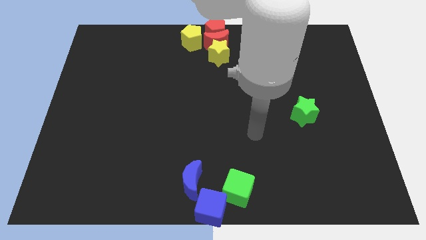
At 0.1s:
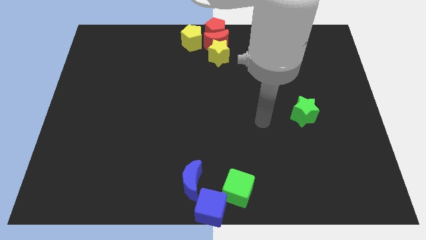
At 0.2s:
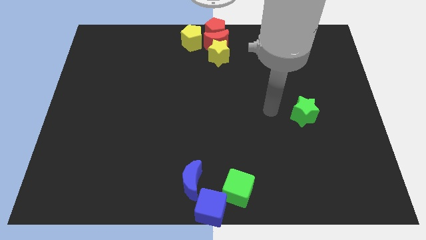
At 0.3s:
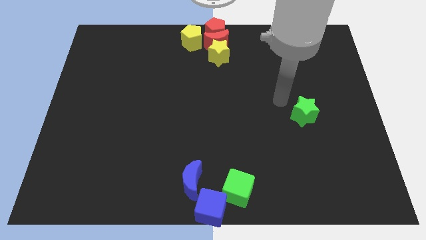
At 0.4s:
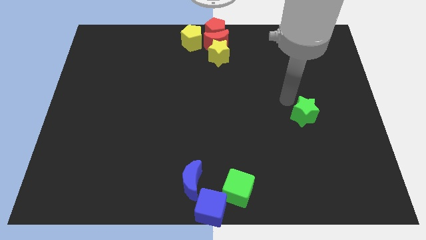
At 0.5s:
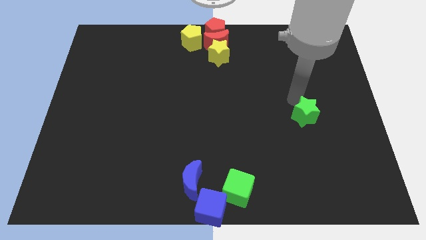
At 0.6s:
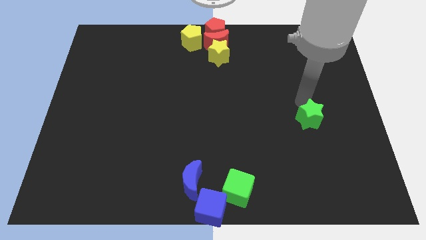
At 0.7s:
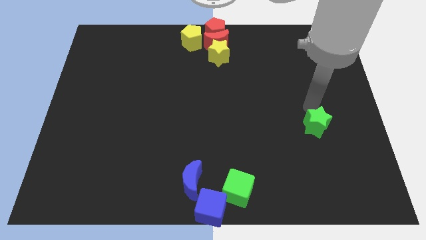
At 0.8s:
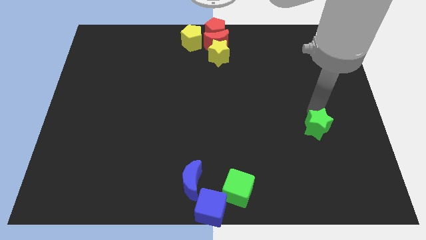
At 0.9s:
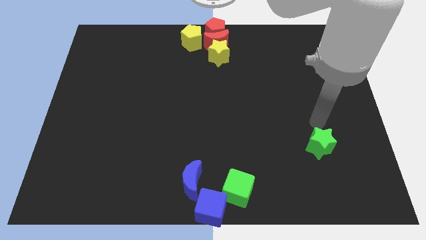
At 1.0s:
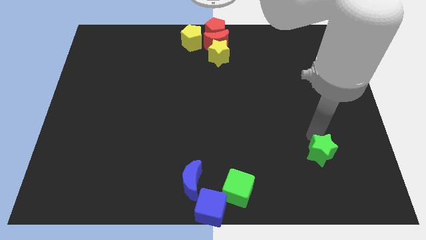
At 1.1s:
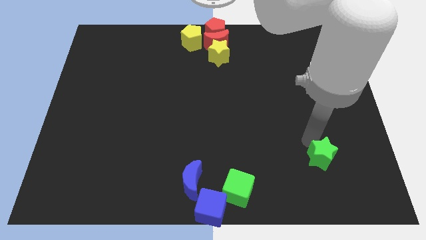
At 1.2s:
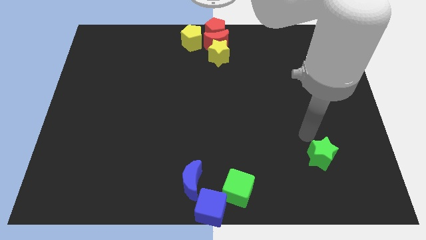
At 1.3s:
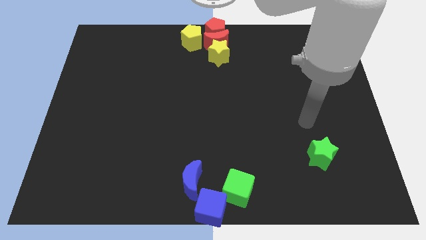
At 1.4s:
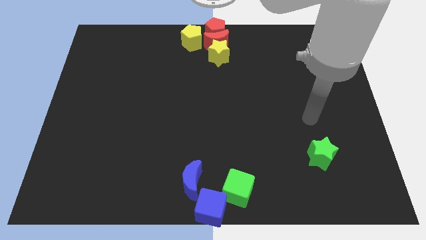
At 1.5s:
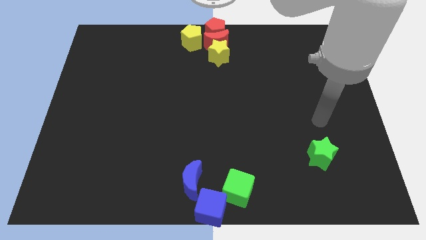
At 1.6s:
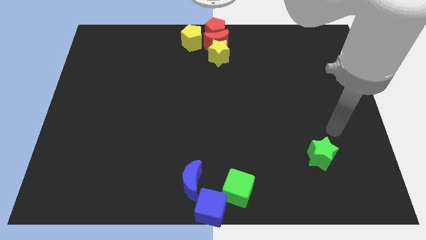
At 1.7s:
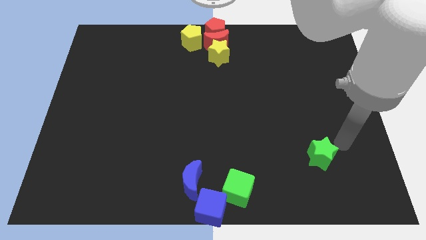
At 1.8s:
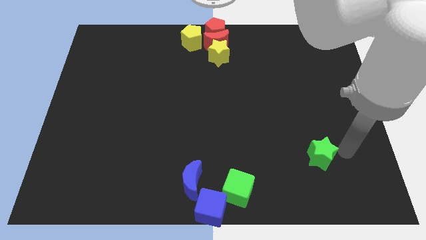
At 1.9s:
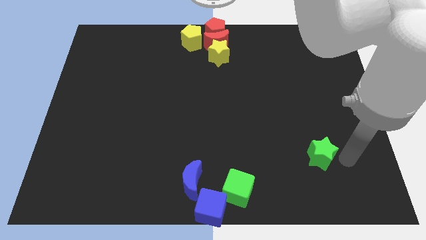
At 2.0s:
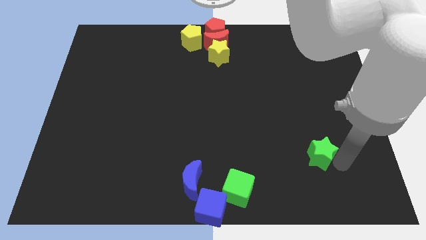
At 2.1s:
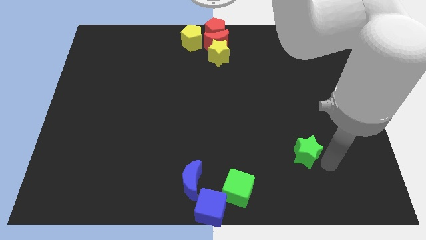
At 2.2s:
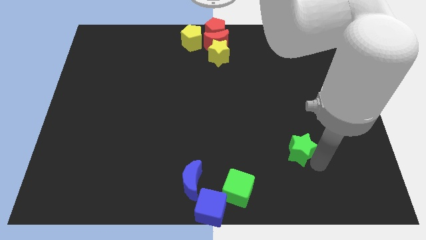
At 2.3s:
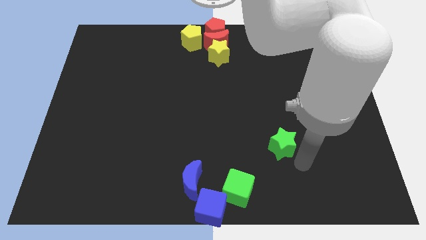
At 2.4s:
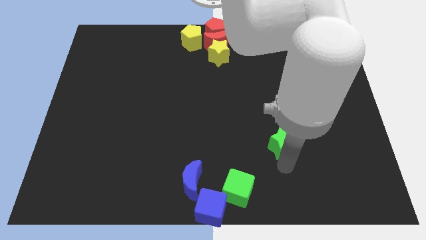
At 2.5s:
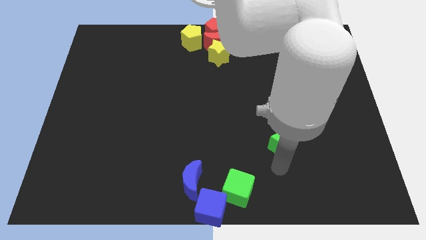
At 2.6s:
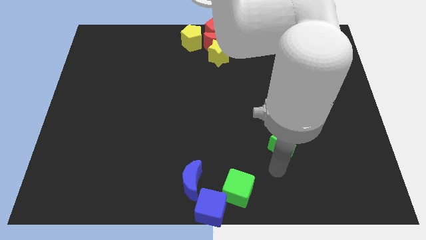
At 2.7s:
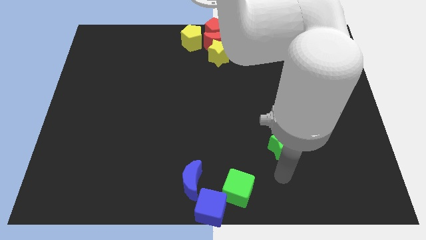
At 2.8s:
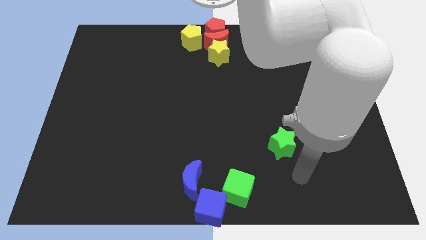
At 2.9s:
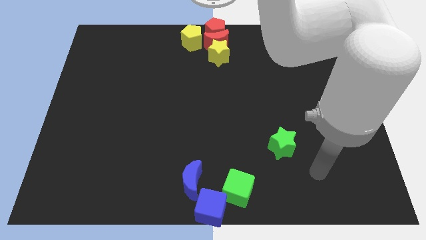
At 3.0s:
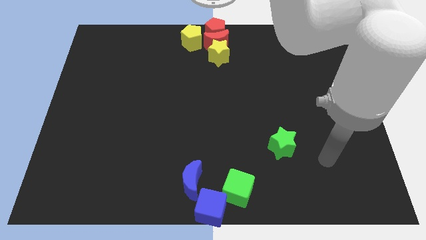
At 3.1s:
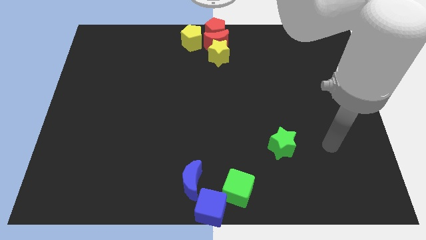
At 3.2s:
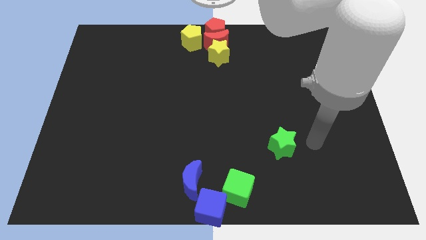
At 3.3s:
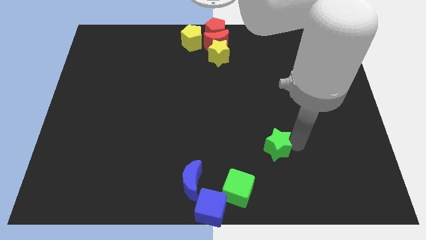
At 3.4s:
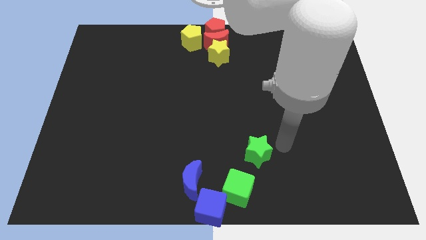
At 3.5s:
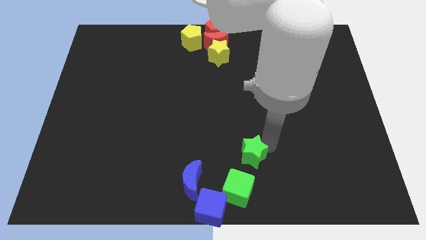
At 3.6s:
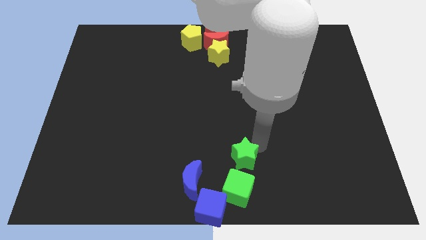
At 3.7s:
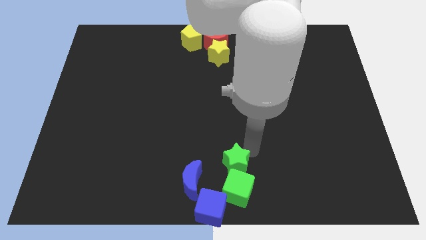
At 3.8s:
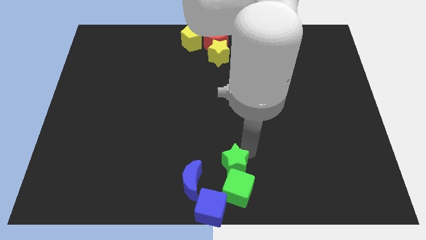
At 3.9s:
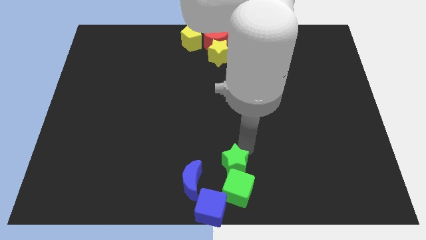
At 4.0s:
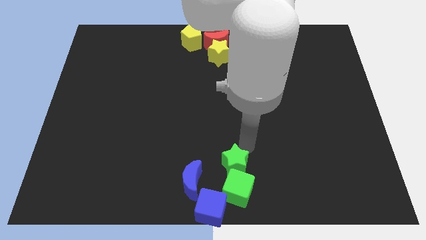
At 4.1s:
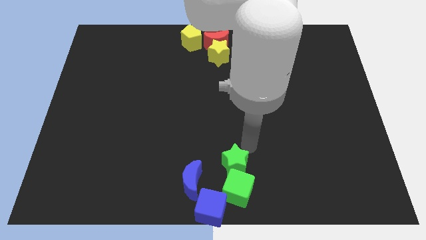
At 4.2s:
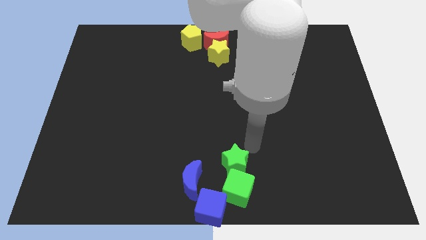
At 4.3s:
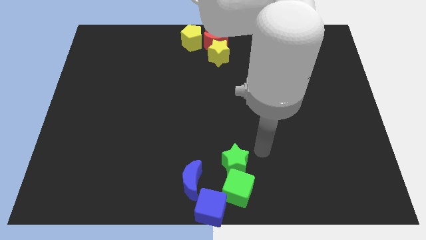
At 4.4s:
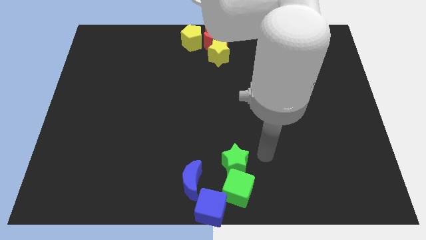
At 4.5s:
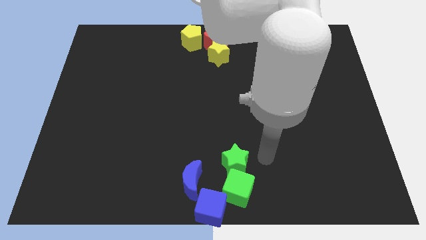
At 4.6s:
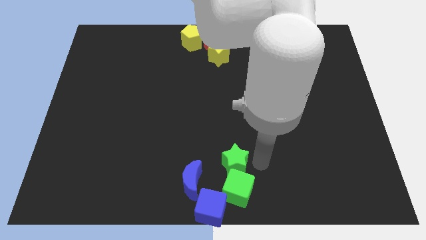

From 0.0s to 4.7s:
move the green star on top of the green cube

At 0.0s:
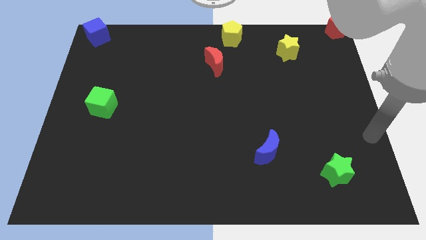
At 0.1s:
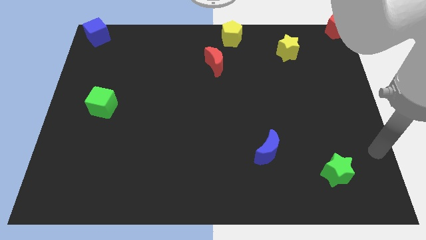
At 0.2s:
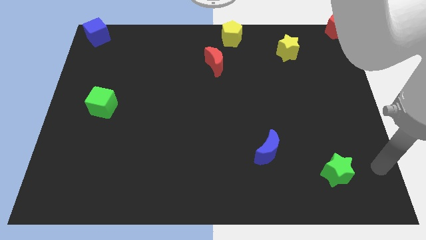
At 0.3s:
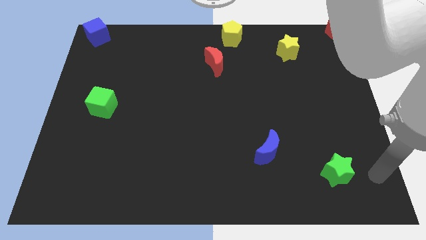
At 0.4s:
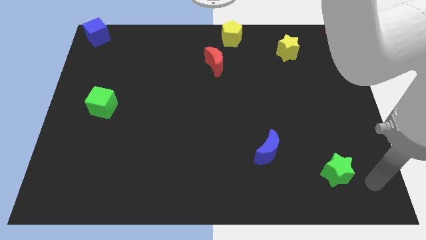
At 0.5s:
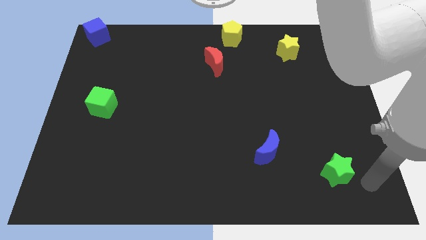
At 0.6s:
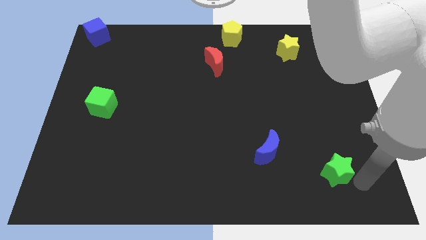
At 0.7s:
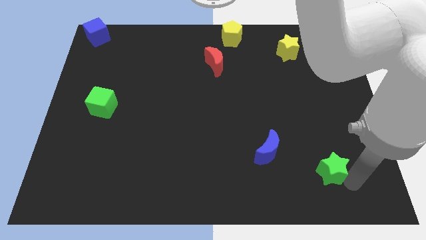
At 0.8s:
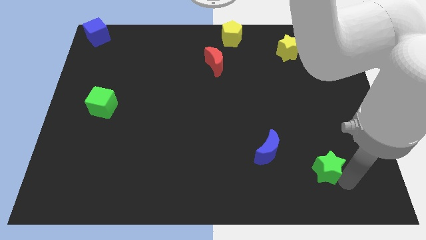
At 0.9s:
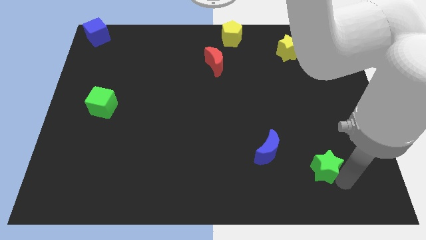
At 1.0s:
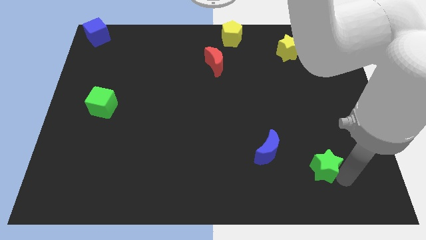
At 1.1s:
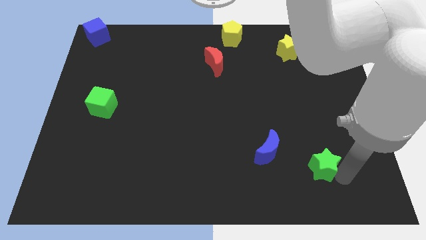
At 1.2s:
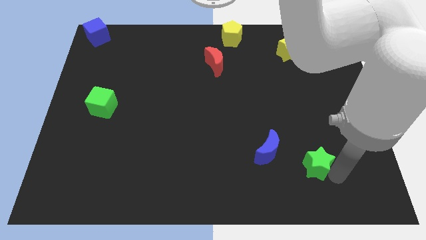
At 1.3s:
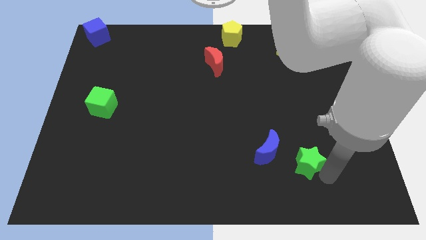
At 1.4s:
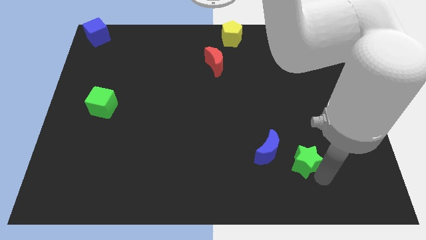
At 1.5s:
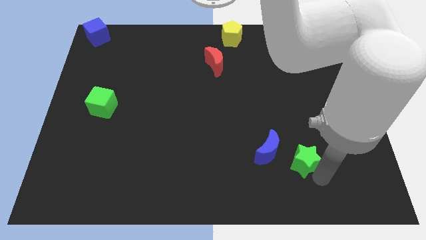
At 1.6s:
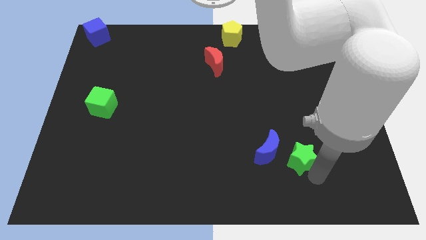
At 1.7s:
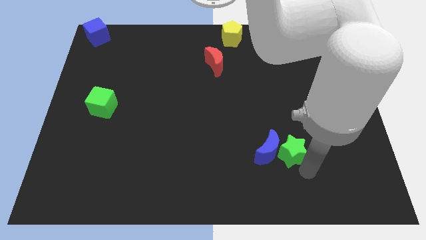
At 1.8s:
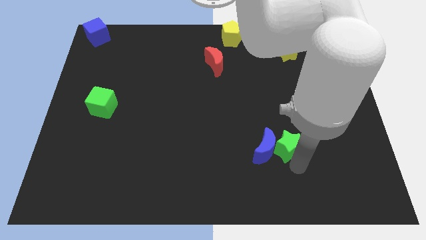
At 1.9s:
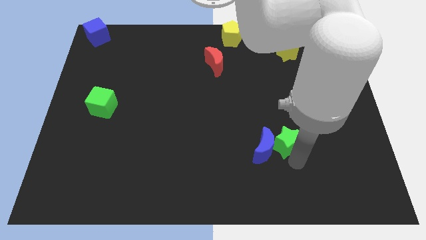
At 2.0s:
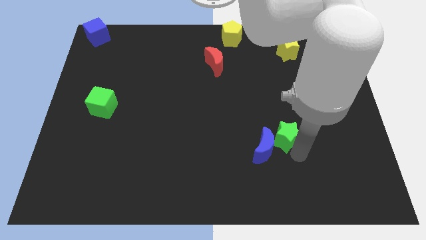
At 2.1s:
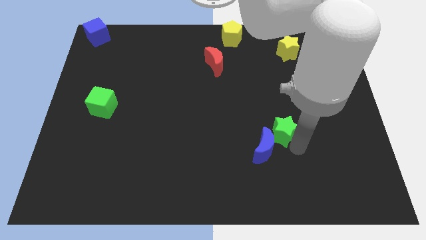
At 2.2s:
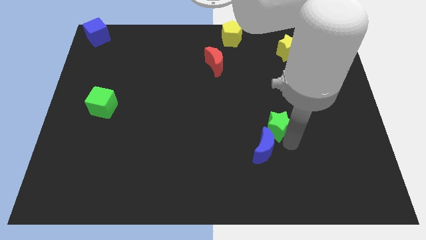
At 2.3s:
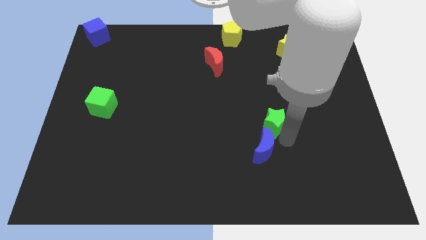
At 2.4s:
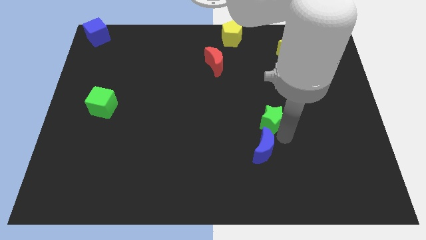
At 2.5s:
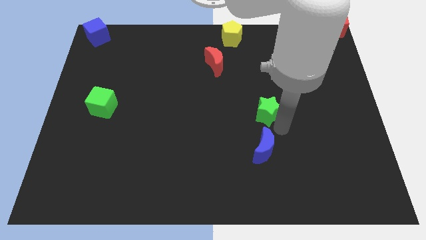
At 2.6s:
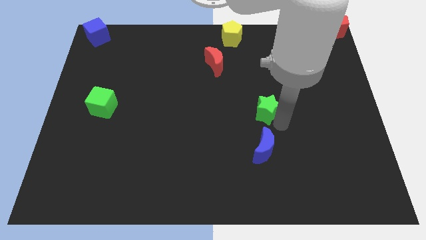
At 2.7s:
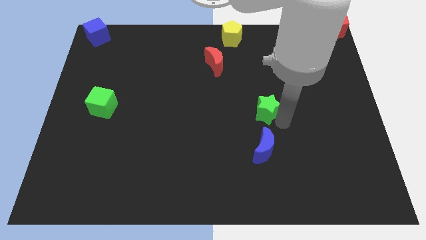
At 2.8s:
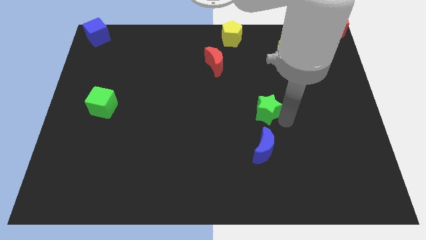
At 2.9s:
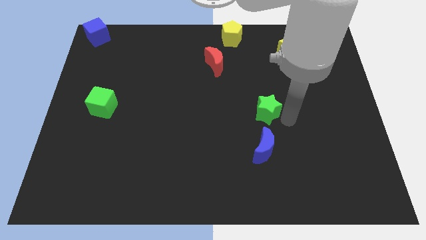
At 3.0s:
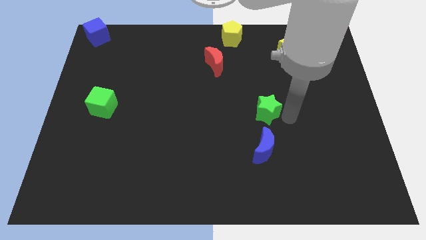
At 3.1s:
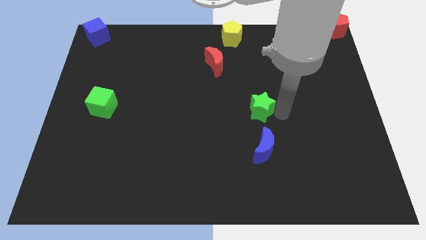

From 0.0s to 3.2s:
slide the green star at the top of the blue crescent

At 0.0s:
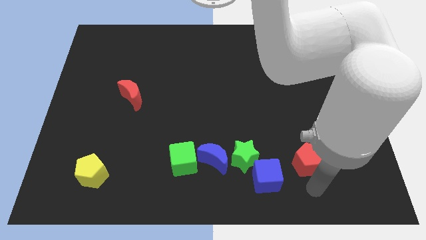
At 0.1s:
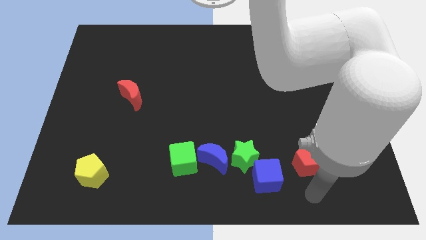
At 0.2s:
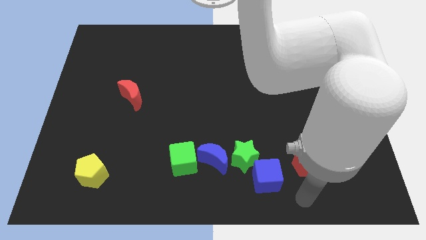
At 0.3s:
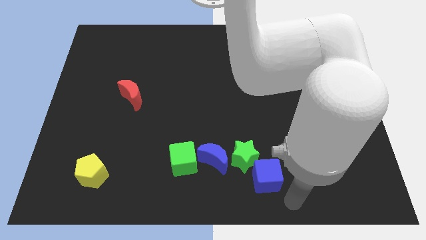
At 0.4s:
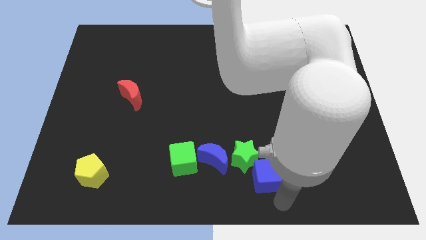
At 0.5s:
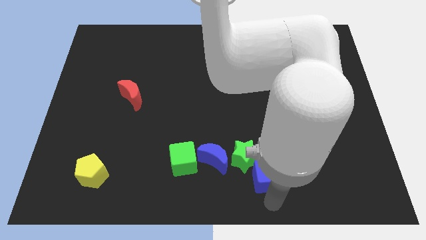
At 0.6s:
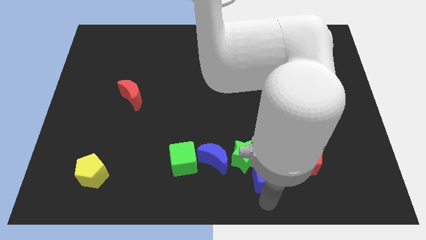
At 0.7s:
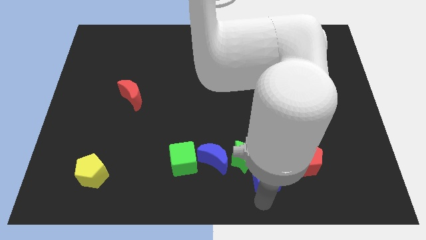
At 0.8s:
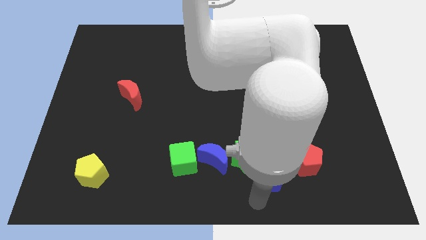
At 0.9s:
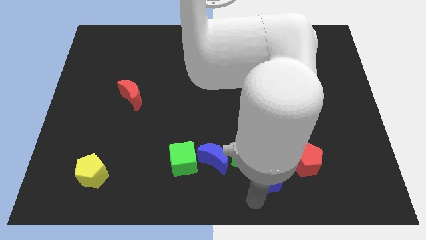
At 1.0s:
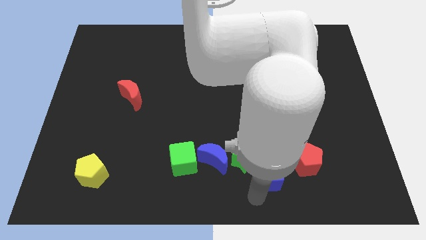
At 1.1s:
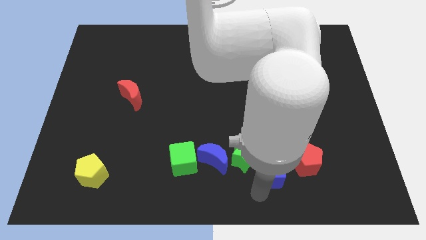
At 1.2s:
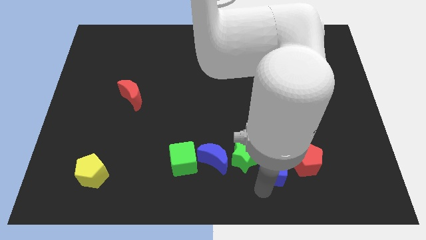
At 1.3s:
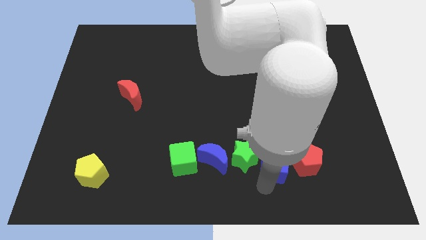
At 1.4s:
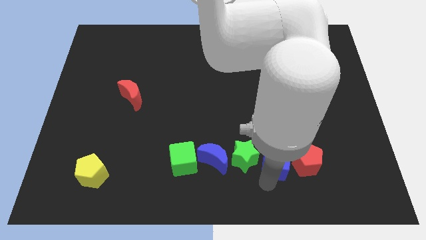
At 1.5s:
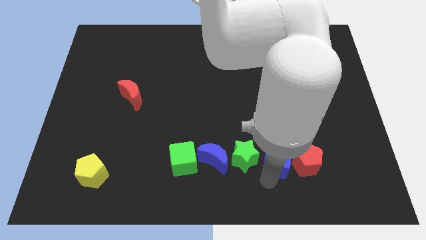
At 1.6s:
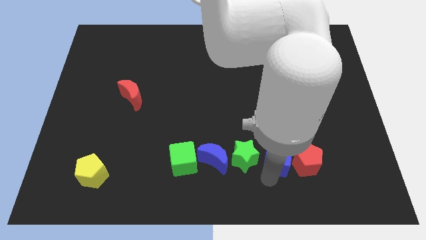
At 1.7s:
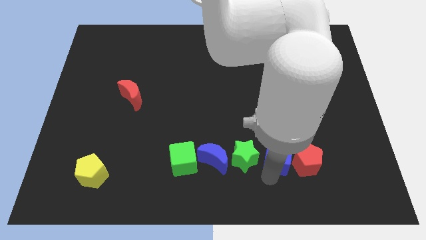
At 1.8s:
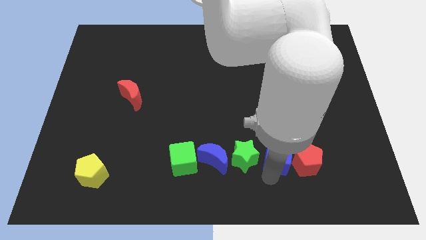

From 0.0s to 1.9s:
place the blue cube in between the red pentagon and green star
